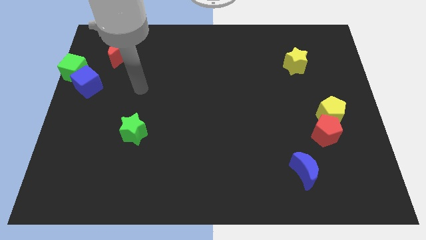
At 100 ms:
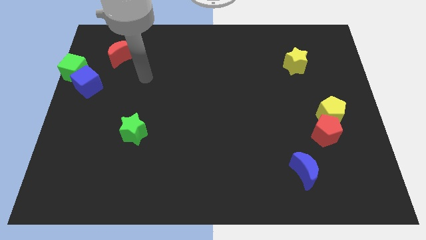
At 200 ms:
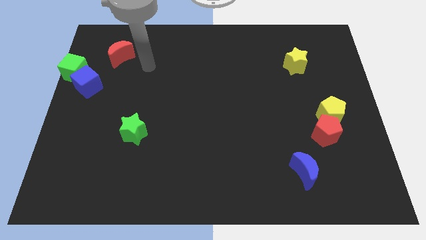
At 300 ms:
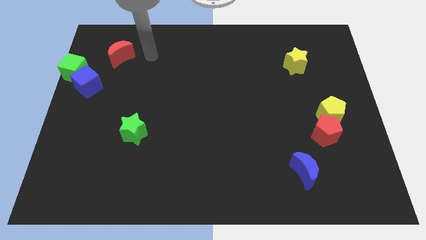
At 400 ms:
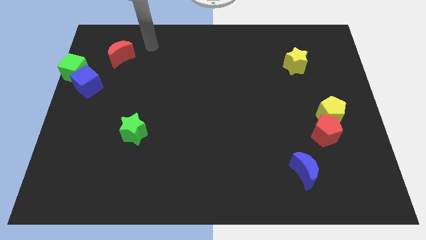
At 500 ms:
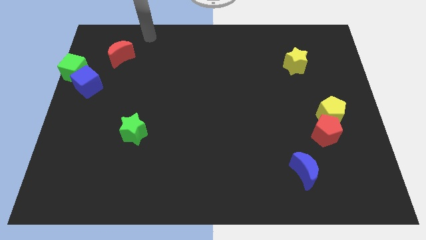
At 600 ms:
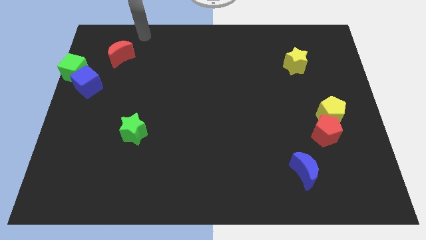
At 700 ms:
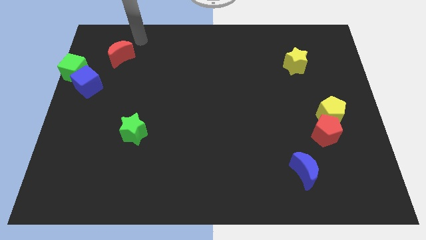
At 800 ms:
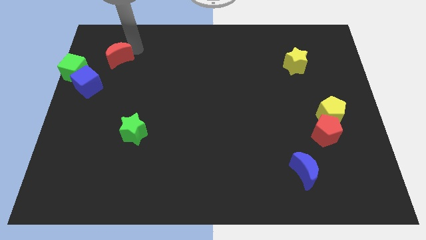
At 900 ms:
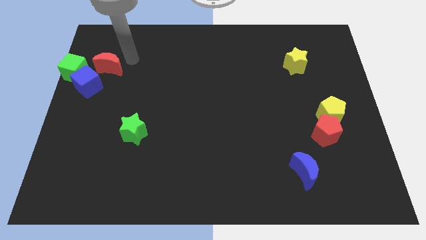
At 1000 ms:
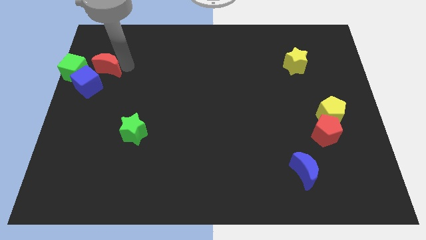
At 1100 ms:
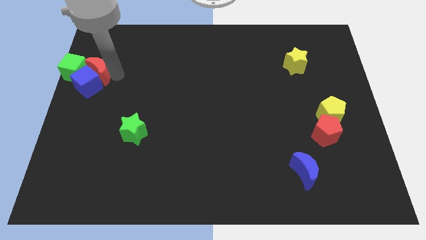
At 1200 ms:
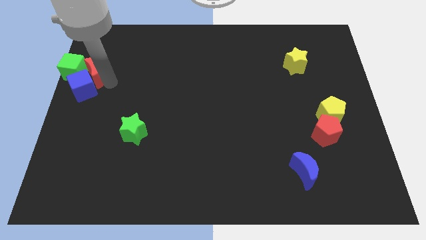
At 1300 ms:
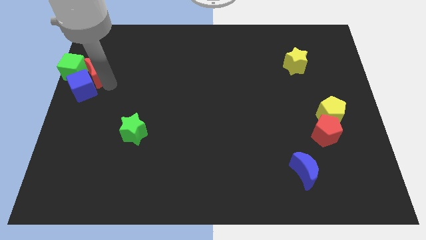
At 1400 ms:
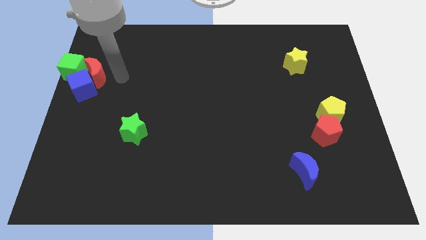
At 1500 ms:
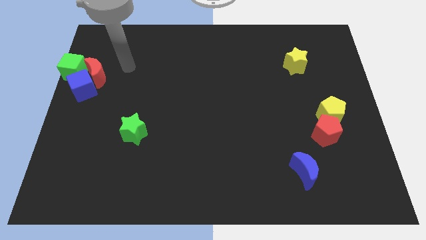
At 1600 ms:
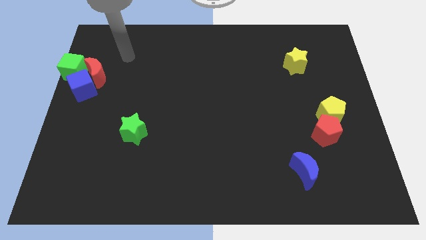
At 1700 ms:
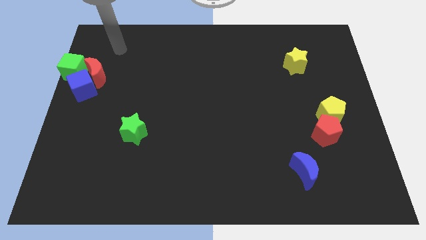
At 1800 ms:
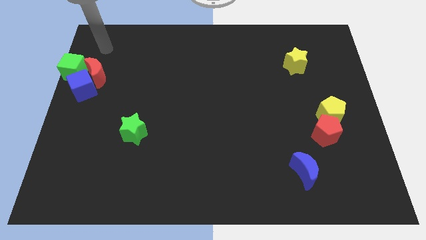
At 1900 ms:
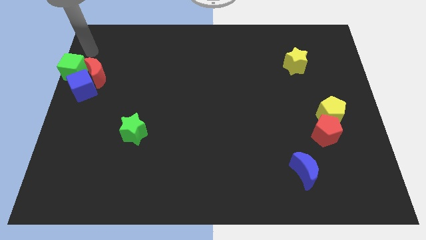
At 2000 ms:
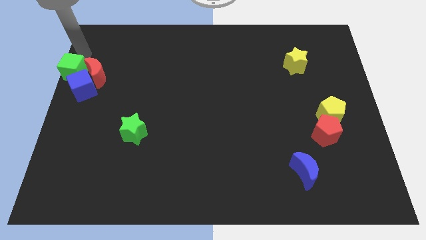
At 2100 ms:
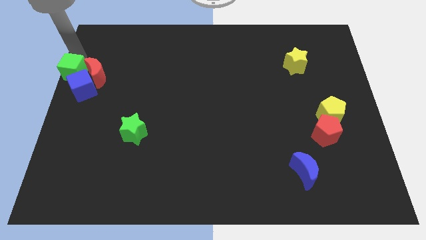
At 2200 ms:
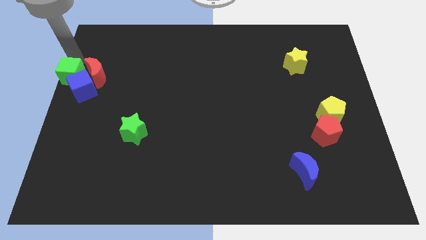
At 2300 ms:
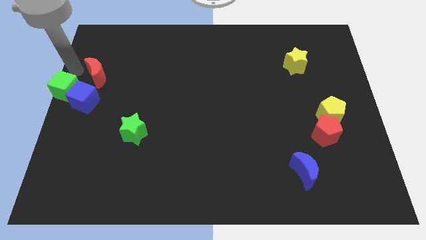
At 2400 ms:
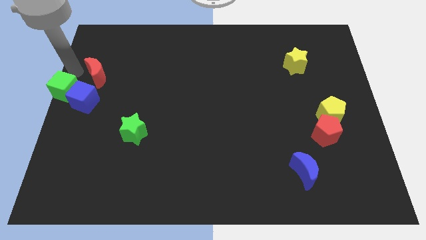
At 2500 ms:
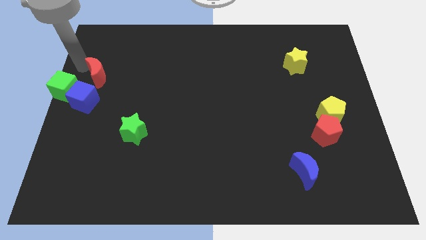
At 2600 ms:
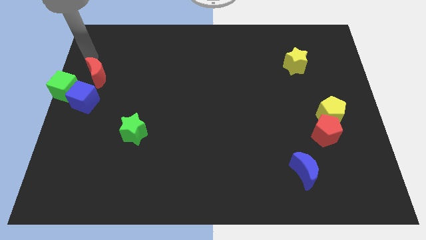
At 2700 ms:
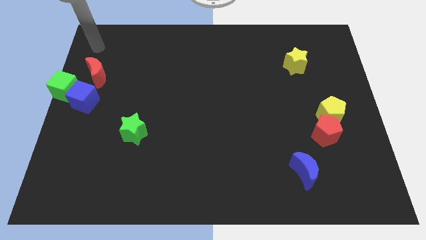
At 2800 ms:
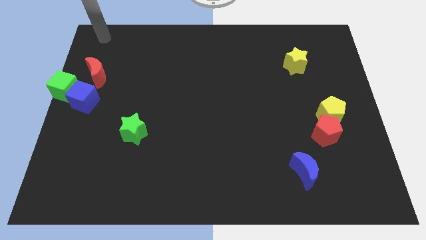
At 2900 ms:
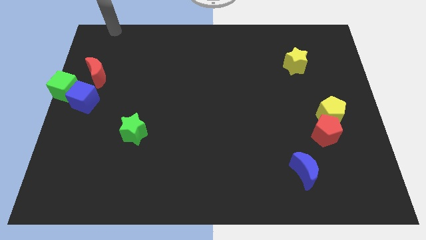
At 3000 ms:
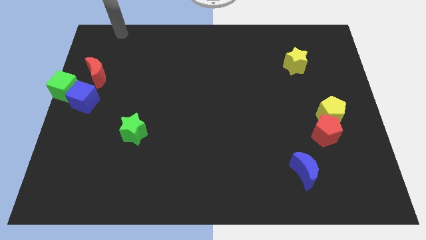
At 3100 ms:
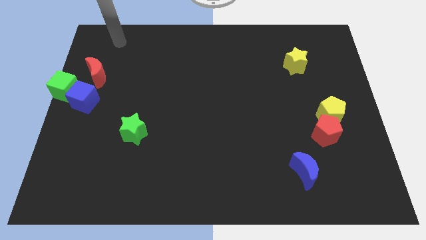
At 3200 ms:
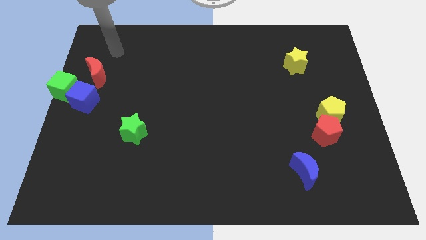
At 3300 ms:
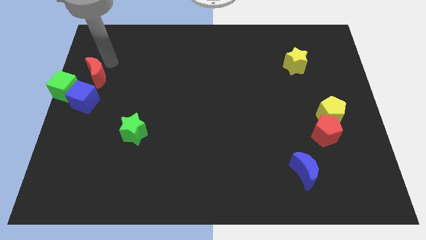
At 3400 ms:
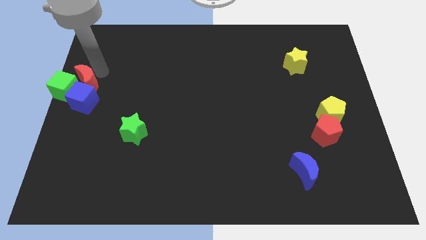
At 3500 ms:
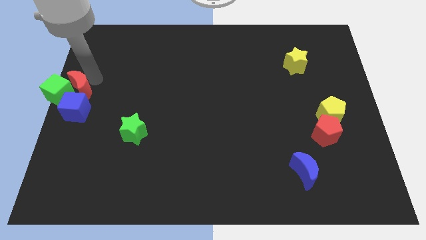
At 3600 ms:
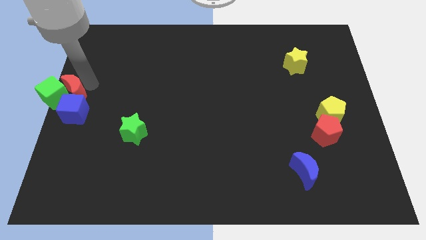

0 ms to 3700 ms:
push the red moon into the group of block

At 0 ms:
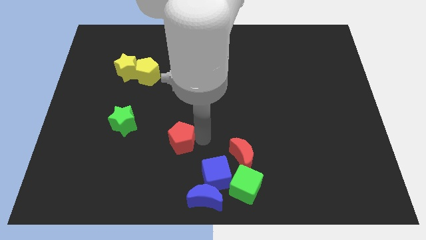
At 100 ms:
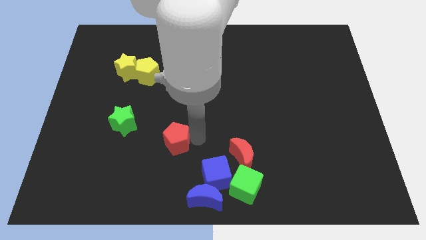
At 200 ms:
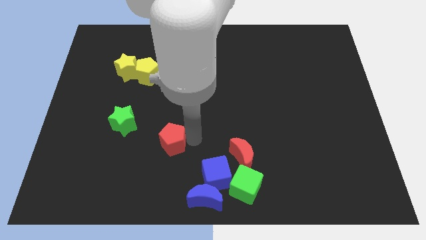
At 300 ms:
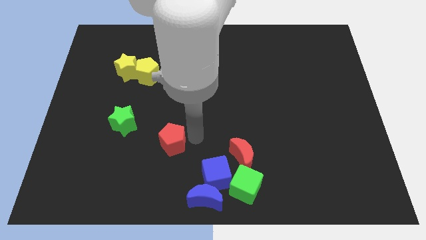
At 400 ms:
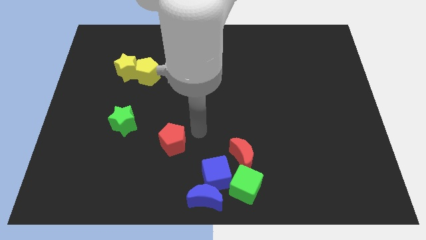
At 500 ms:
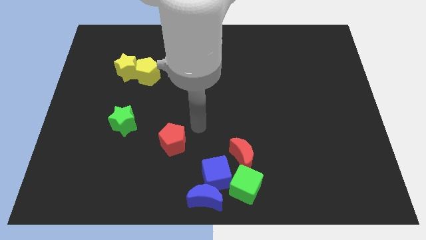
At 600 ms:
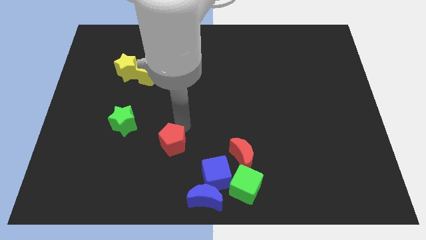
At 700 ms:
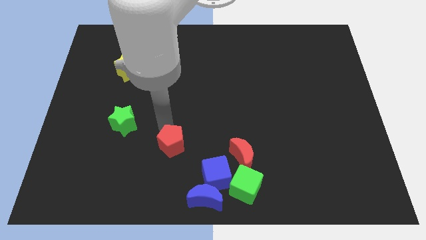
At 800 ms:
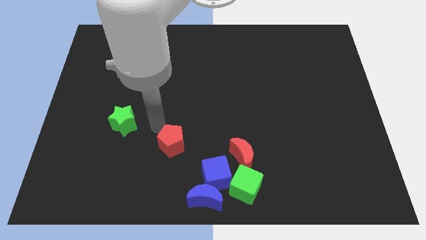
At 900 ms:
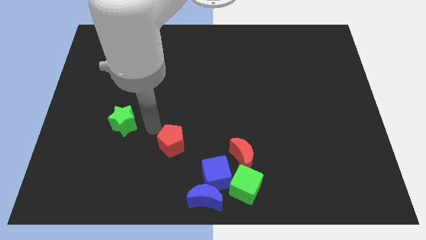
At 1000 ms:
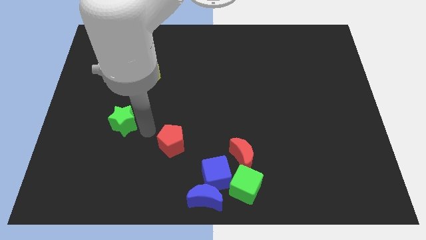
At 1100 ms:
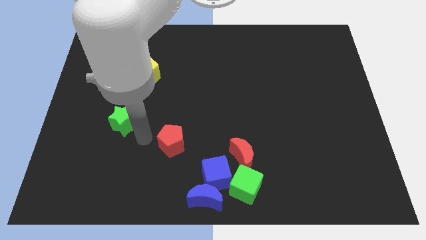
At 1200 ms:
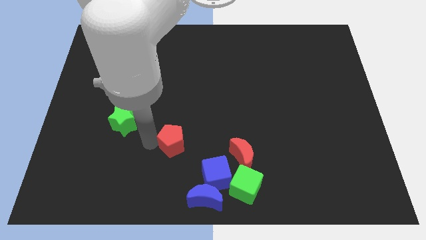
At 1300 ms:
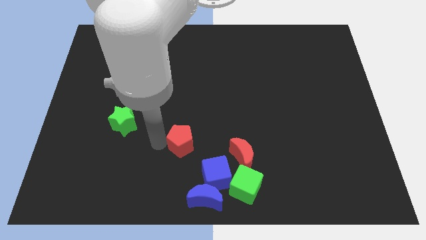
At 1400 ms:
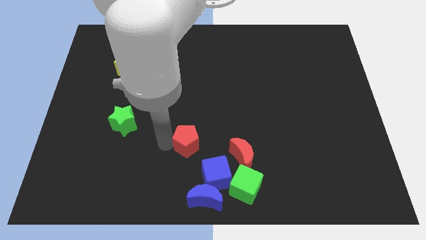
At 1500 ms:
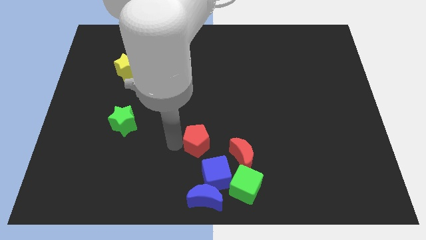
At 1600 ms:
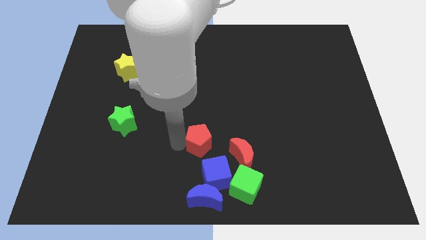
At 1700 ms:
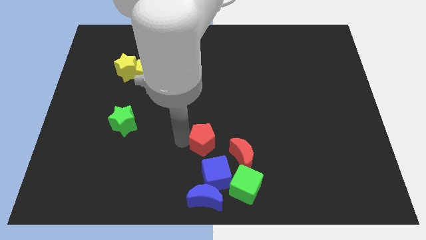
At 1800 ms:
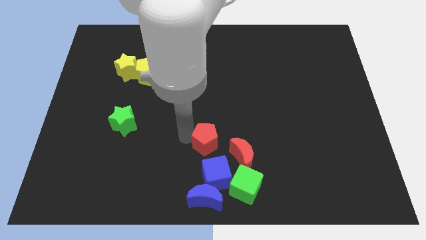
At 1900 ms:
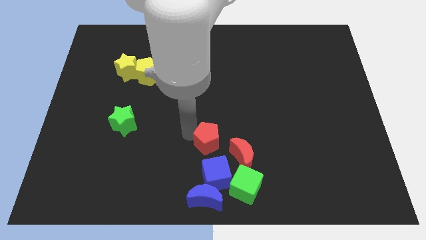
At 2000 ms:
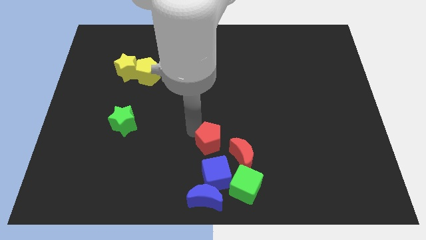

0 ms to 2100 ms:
move red pentagon to the top of the blue cube

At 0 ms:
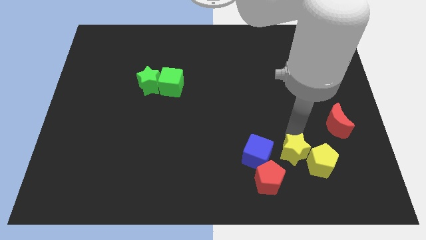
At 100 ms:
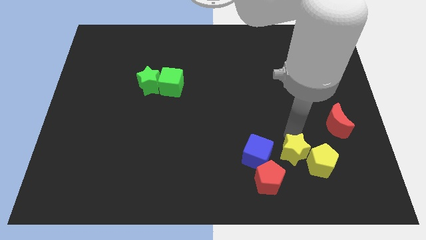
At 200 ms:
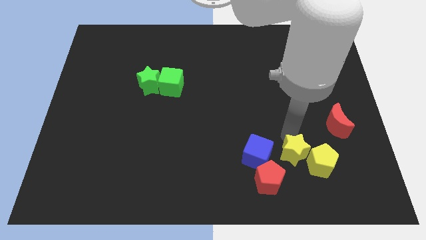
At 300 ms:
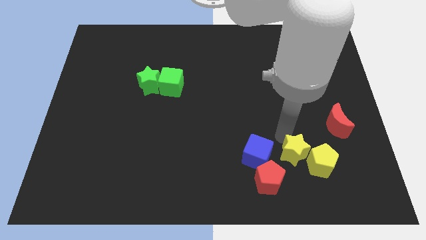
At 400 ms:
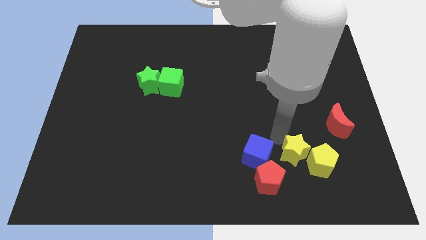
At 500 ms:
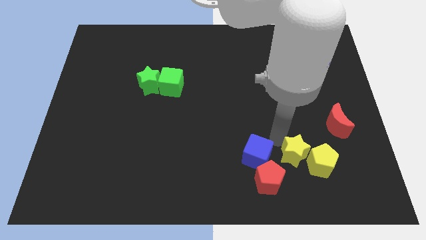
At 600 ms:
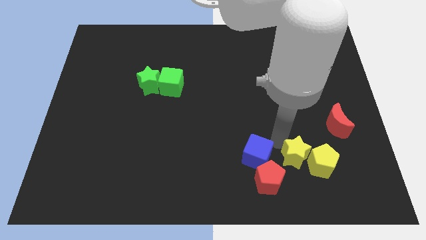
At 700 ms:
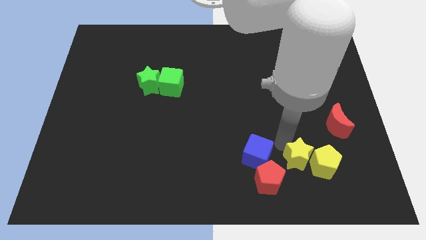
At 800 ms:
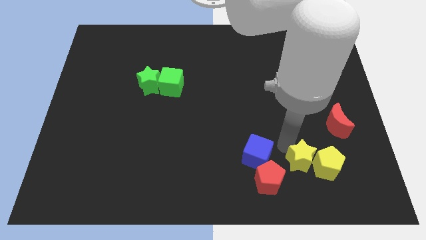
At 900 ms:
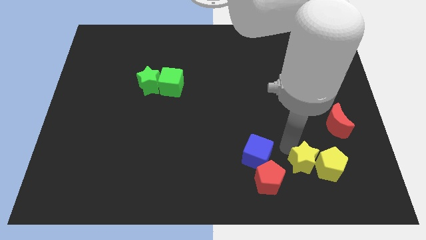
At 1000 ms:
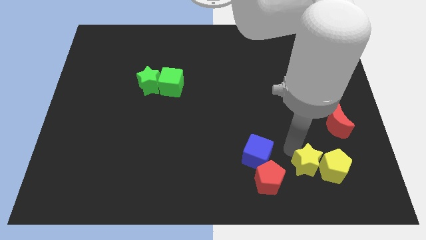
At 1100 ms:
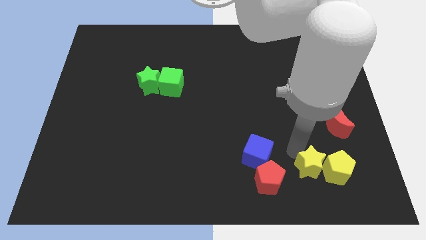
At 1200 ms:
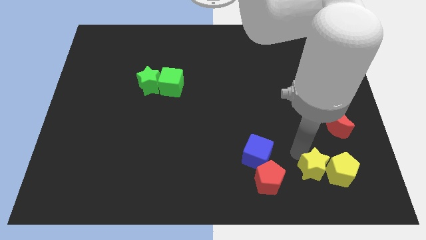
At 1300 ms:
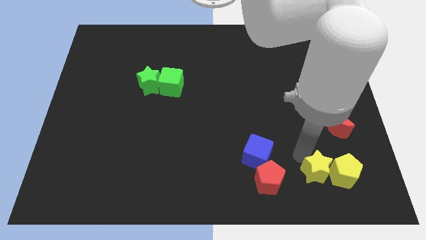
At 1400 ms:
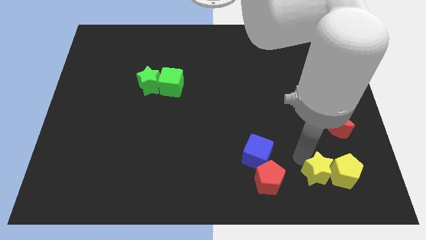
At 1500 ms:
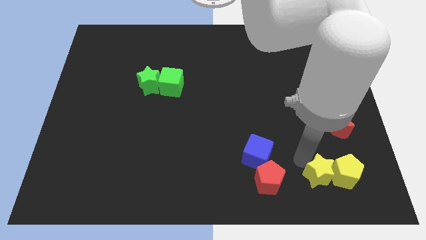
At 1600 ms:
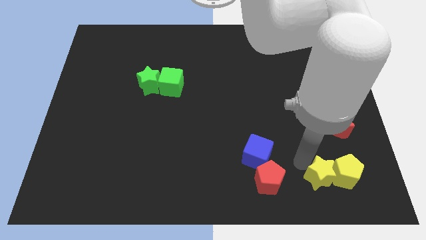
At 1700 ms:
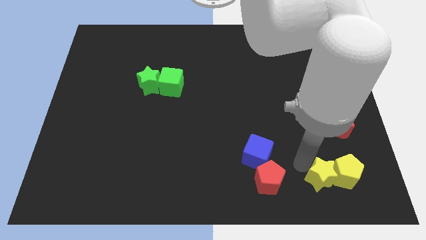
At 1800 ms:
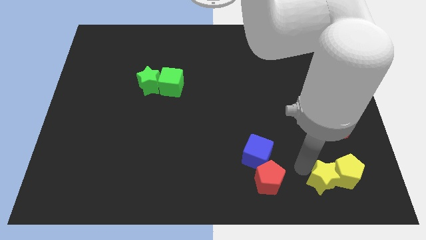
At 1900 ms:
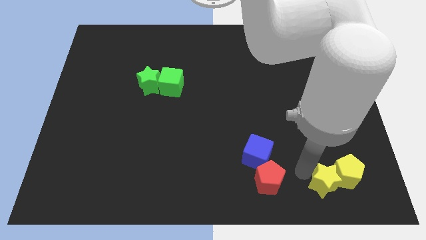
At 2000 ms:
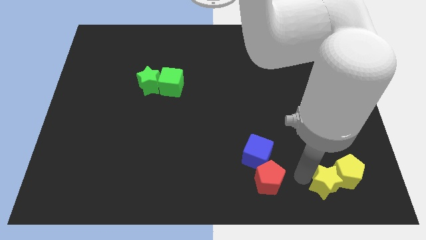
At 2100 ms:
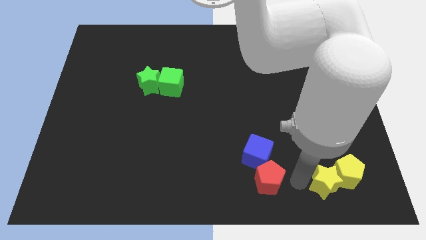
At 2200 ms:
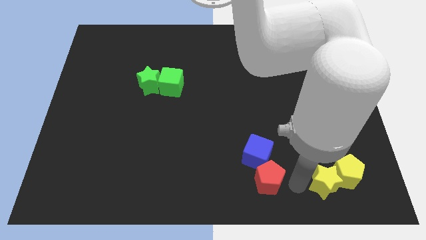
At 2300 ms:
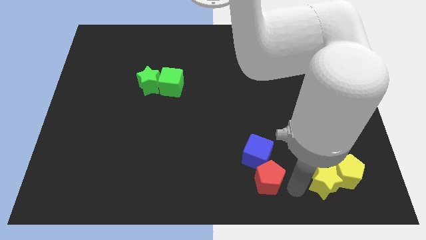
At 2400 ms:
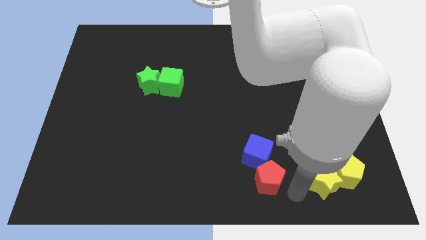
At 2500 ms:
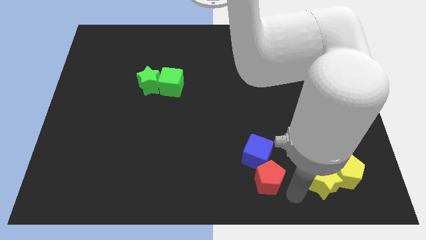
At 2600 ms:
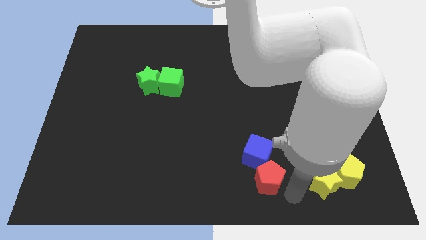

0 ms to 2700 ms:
move yellow blocks to the bottom right of the board

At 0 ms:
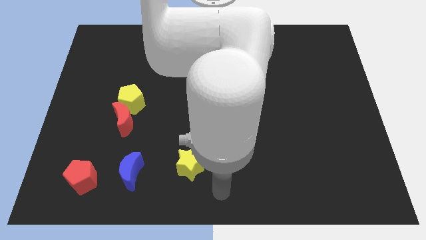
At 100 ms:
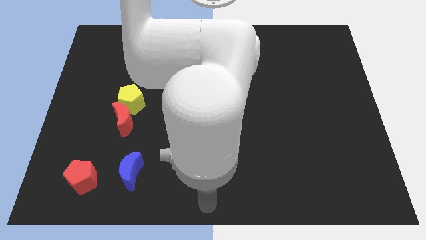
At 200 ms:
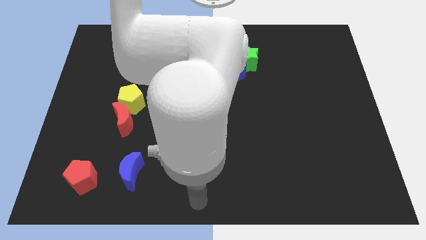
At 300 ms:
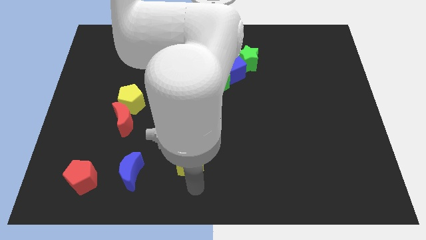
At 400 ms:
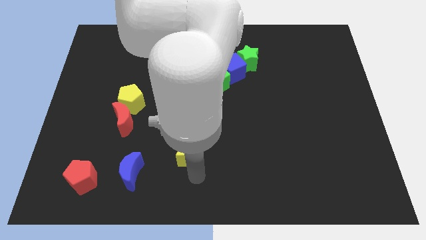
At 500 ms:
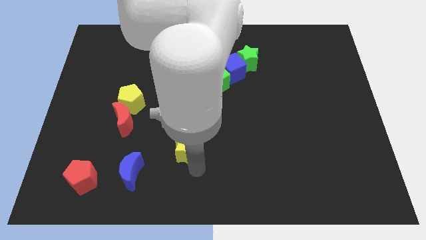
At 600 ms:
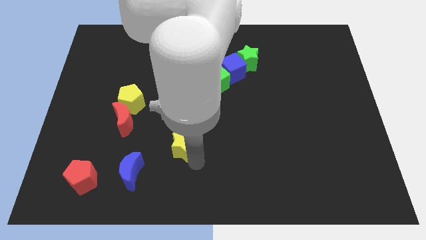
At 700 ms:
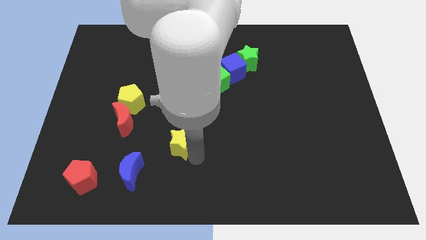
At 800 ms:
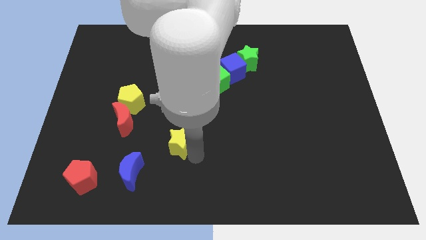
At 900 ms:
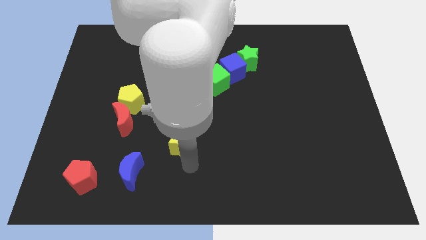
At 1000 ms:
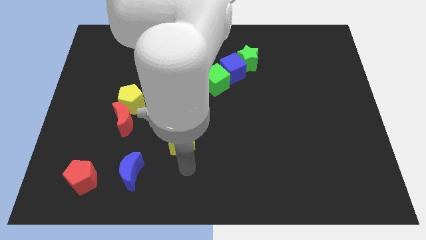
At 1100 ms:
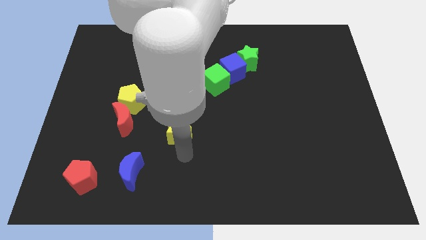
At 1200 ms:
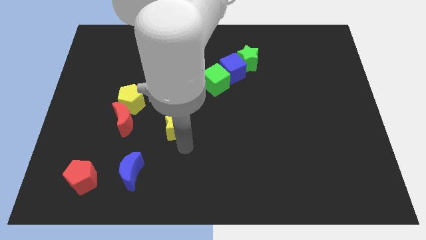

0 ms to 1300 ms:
move the yellow star to the center of the board
